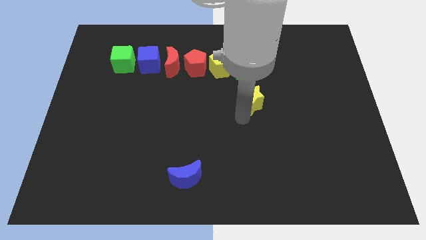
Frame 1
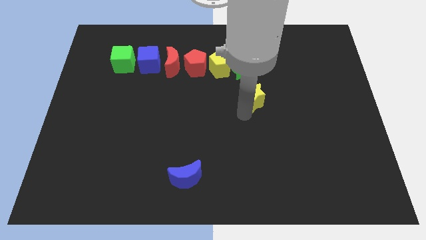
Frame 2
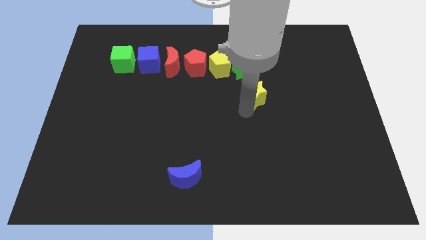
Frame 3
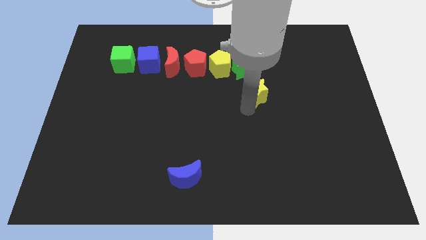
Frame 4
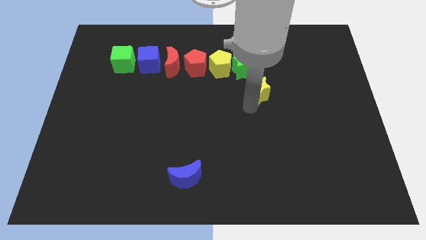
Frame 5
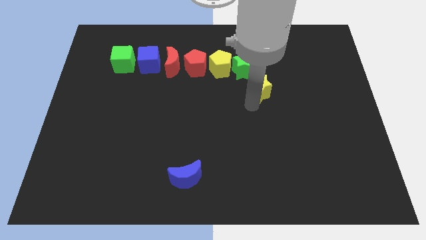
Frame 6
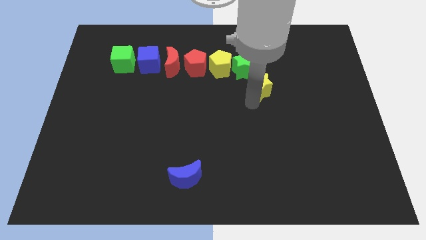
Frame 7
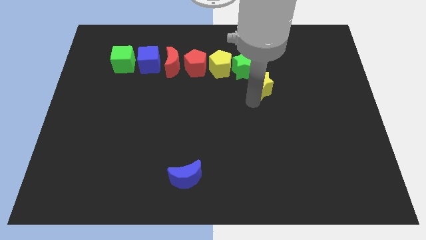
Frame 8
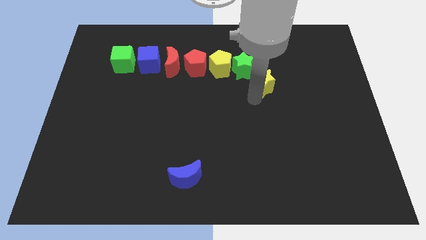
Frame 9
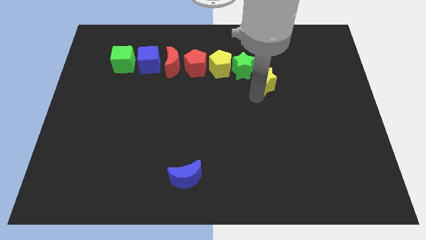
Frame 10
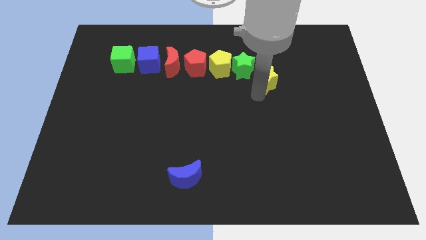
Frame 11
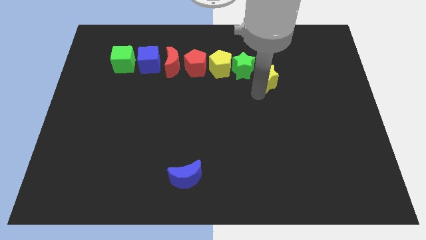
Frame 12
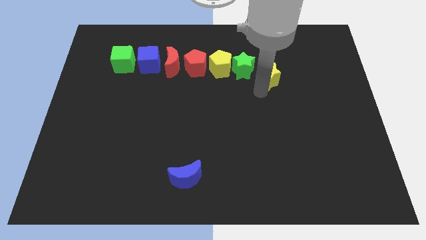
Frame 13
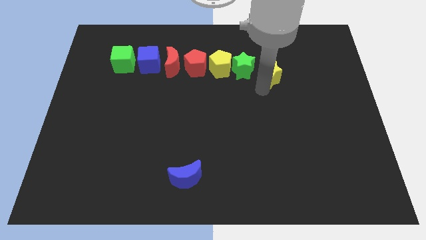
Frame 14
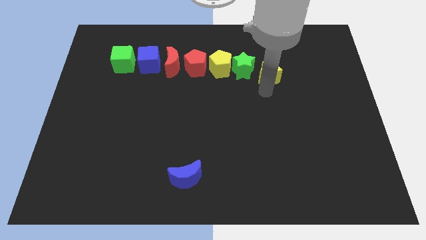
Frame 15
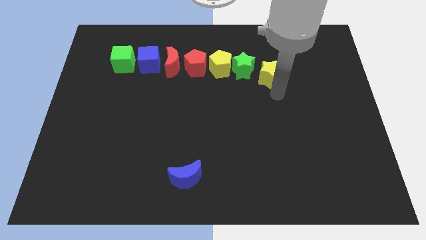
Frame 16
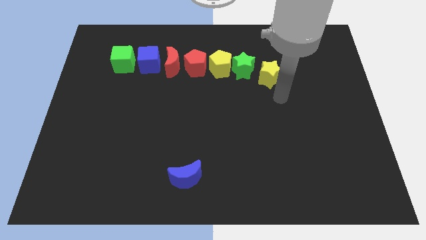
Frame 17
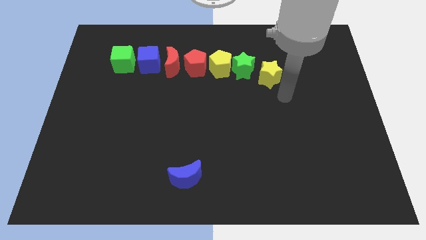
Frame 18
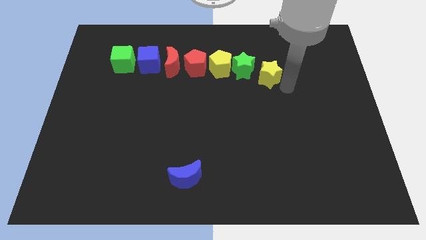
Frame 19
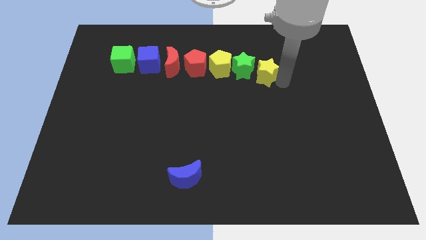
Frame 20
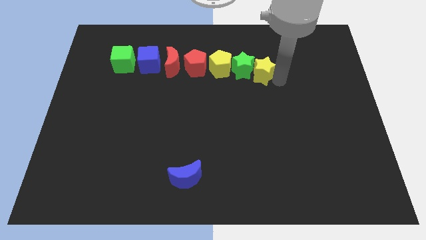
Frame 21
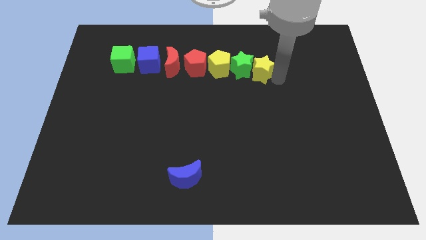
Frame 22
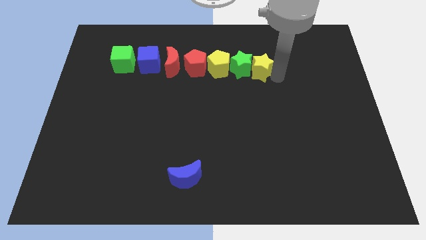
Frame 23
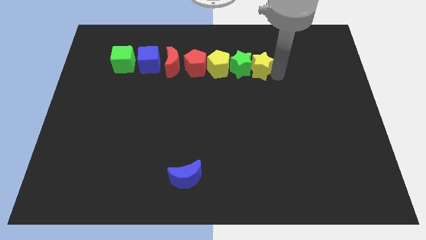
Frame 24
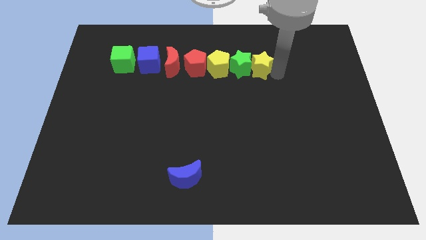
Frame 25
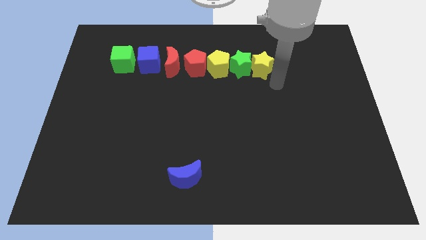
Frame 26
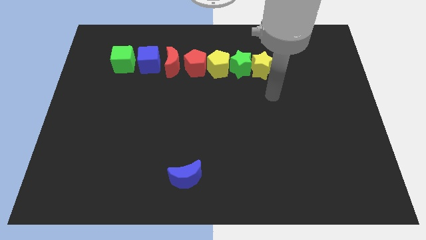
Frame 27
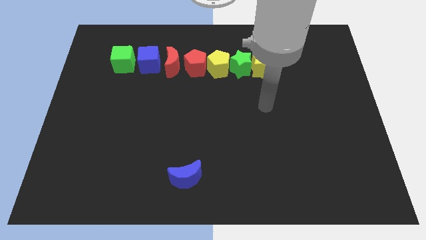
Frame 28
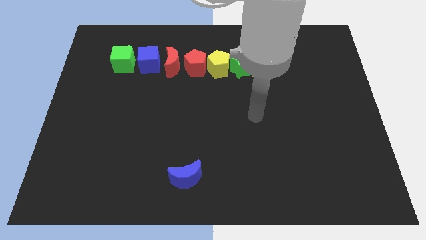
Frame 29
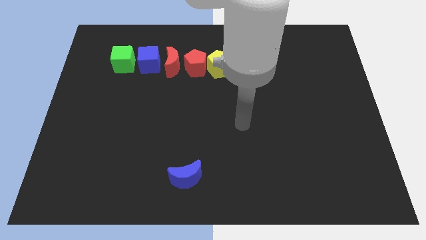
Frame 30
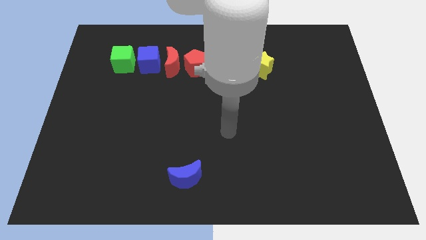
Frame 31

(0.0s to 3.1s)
place yellow star beside green star

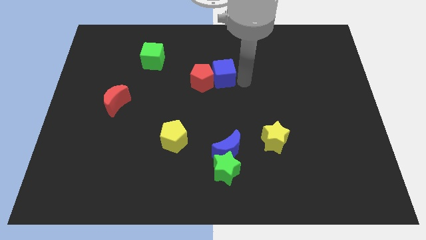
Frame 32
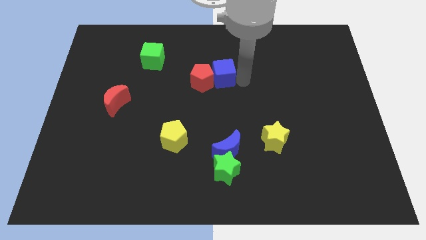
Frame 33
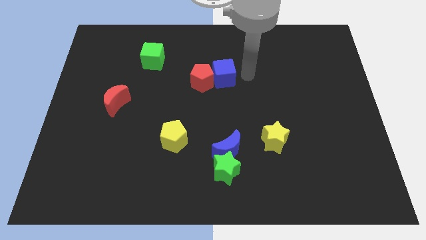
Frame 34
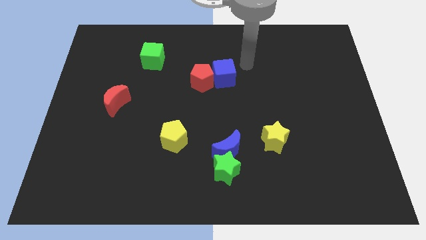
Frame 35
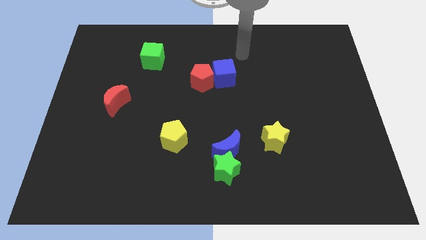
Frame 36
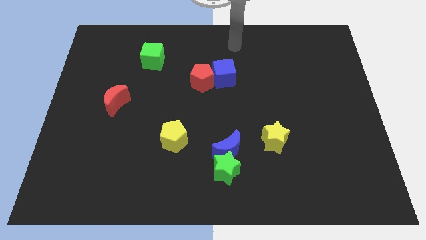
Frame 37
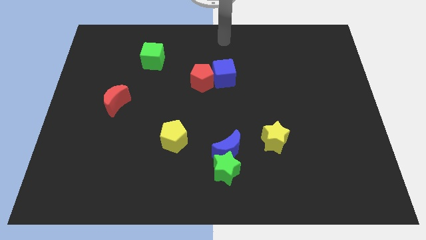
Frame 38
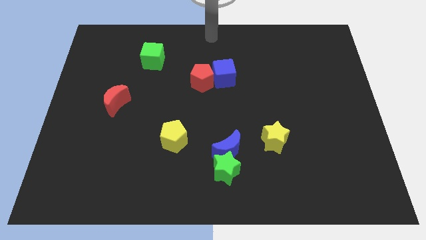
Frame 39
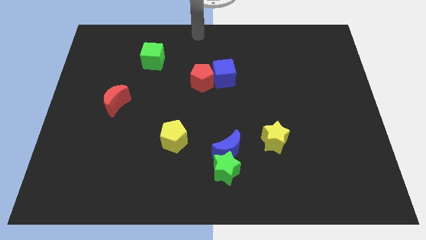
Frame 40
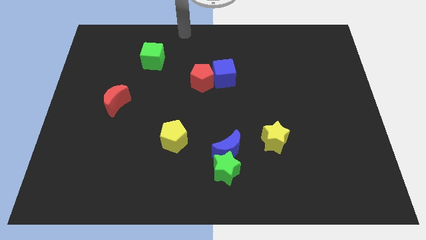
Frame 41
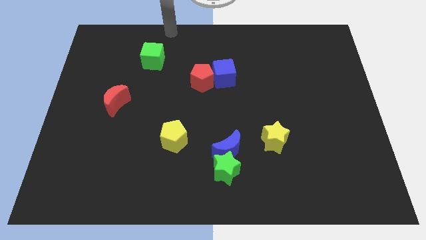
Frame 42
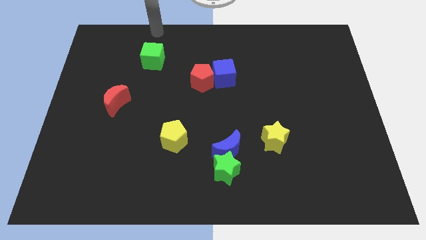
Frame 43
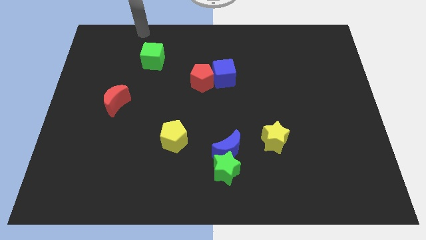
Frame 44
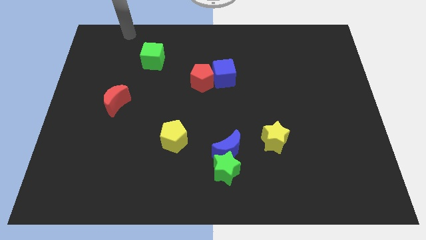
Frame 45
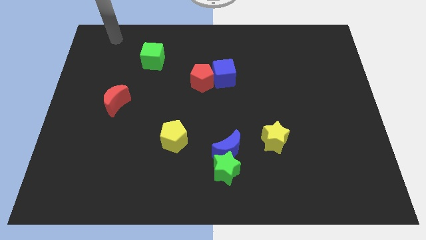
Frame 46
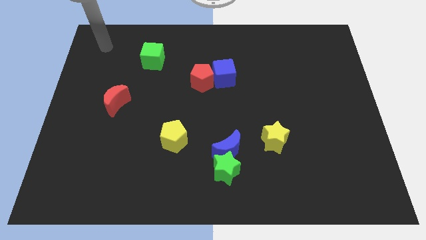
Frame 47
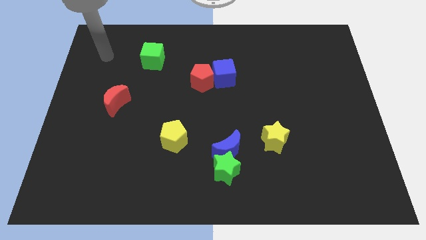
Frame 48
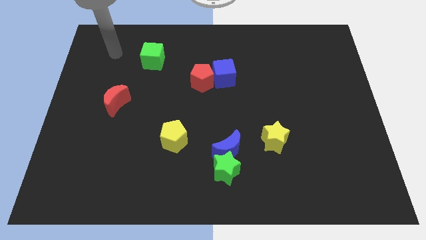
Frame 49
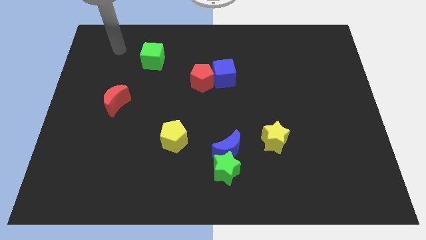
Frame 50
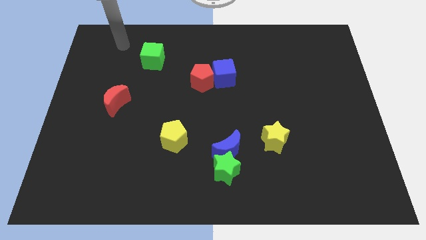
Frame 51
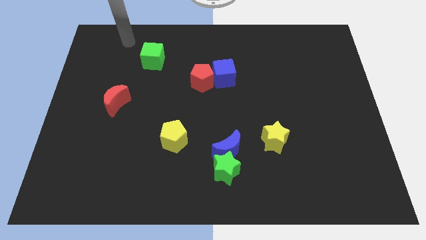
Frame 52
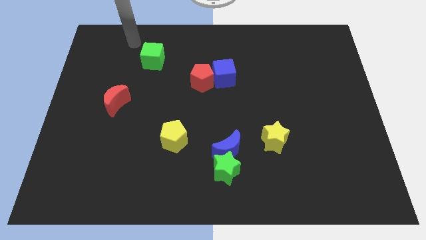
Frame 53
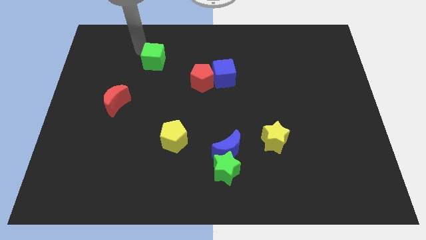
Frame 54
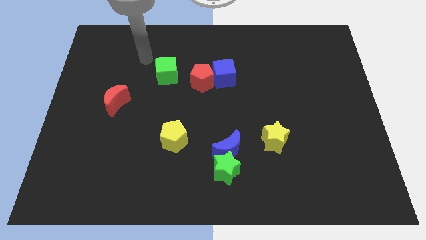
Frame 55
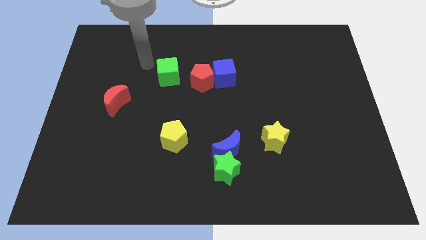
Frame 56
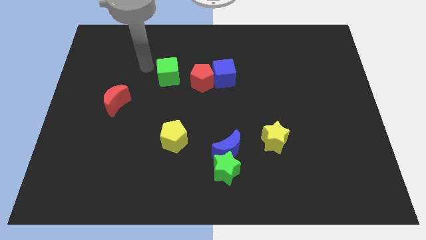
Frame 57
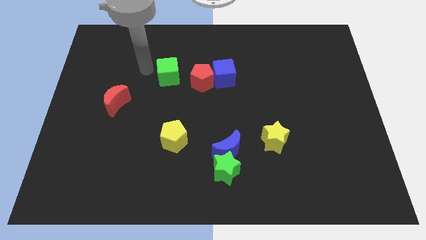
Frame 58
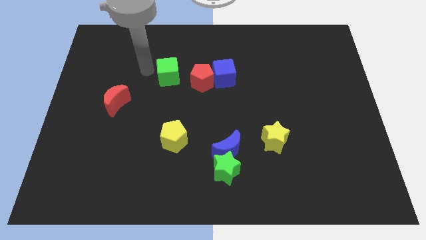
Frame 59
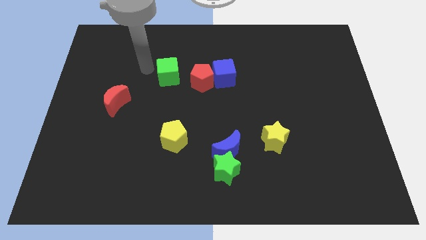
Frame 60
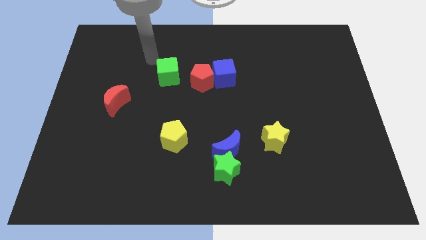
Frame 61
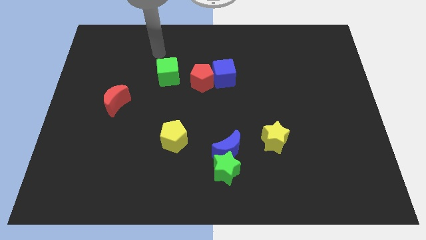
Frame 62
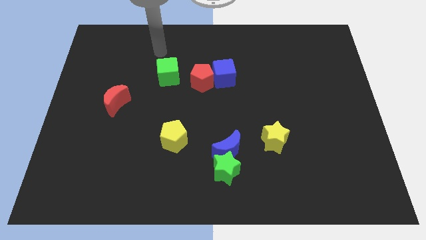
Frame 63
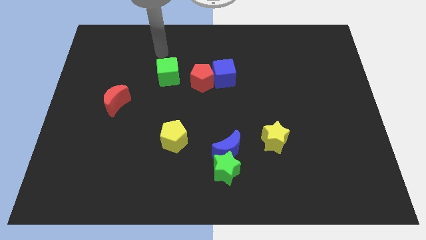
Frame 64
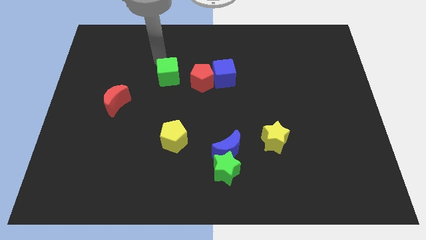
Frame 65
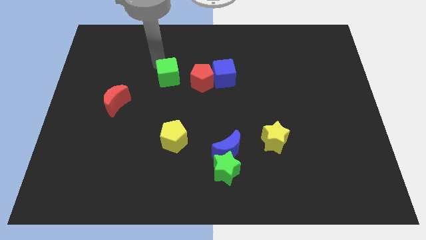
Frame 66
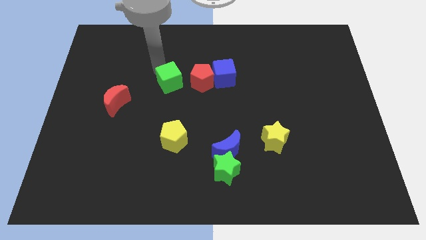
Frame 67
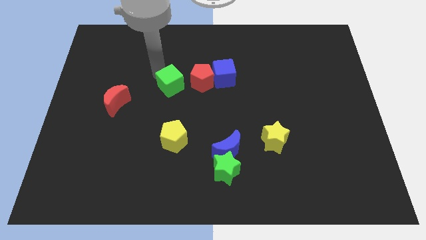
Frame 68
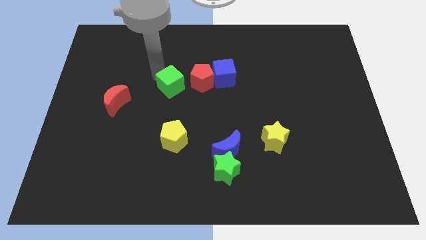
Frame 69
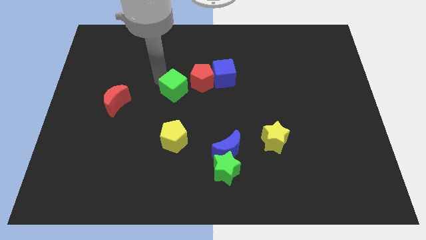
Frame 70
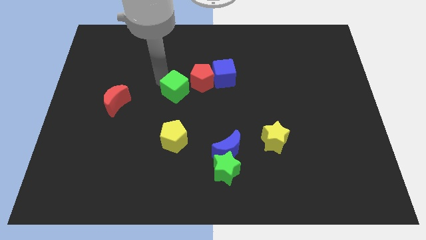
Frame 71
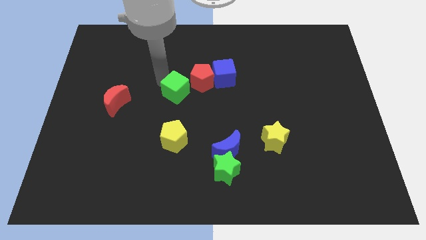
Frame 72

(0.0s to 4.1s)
push the green cube closer to the yellow pentagon

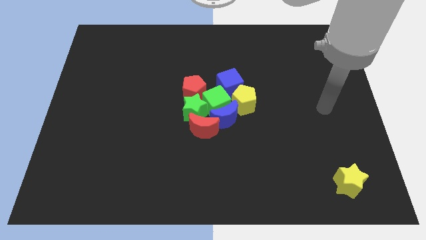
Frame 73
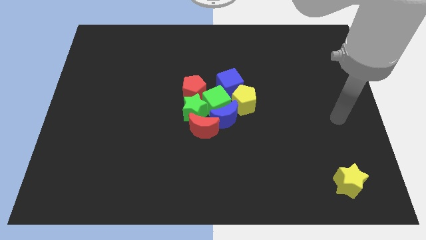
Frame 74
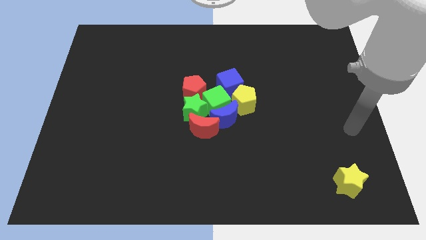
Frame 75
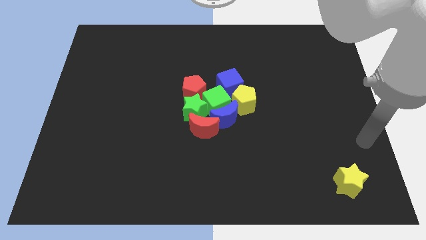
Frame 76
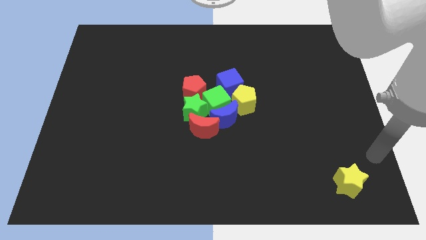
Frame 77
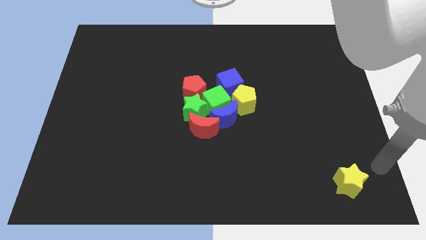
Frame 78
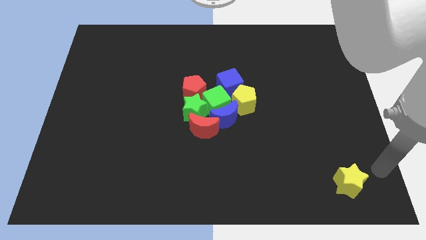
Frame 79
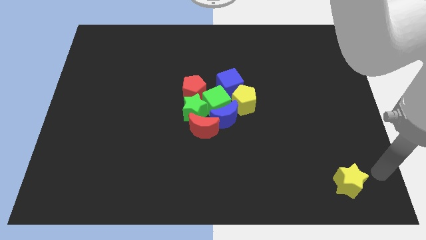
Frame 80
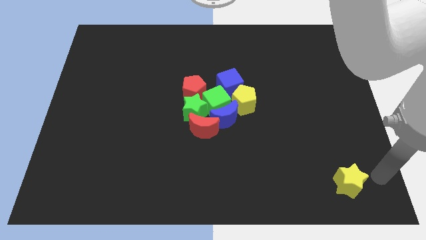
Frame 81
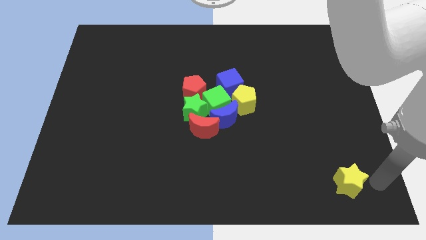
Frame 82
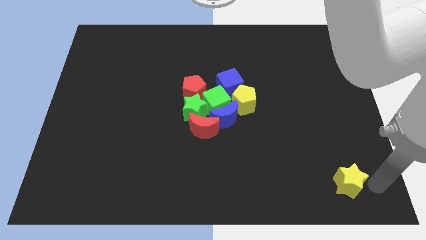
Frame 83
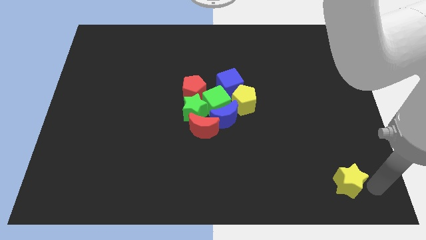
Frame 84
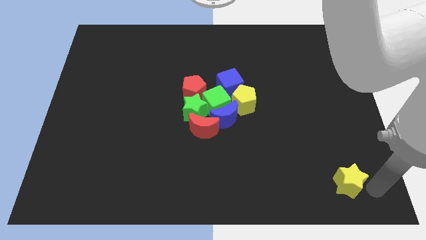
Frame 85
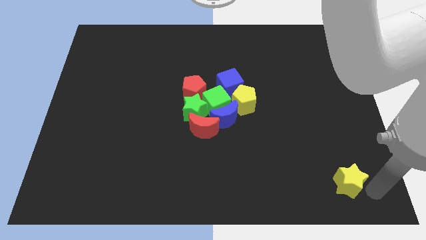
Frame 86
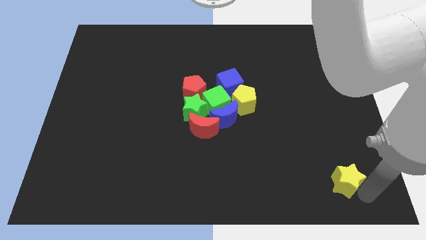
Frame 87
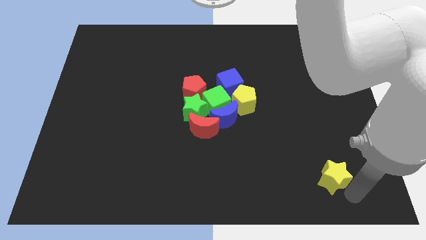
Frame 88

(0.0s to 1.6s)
tap the yellow star

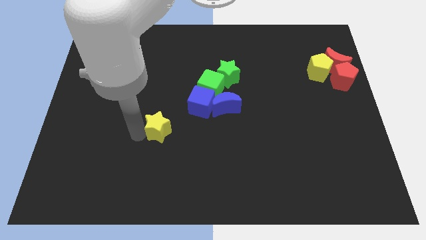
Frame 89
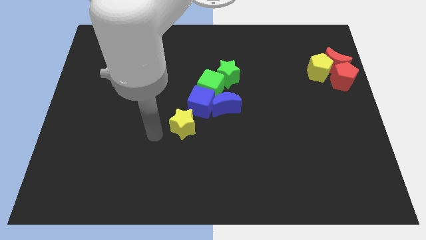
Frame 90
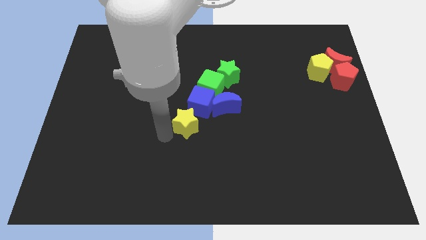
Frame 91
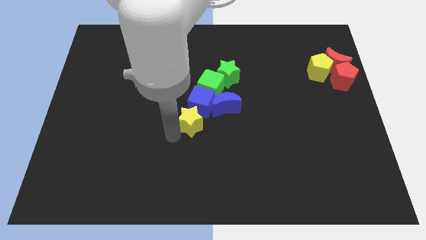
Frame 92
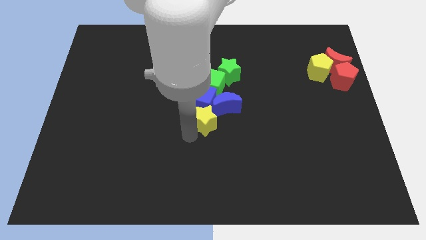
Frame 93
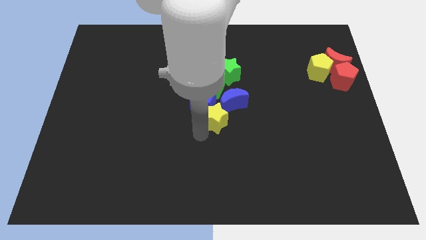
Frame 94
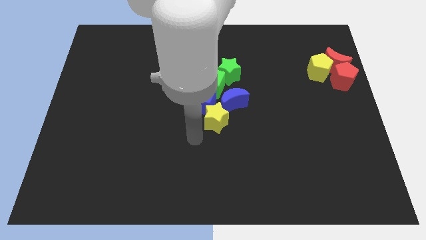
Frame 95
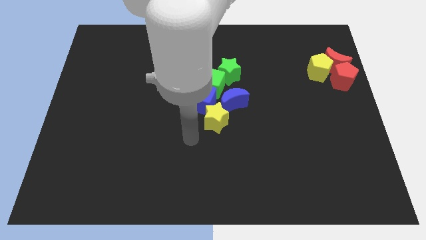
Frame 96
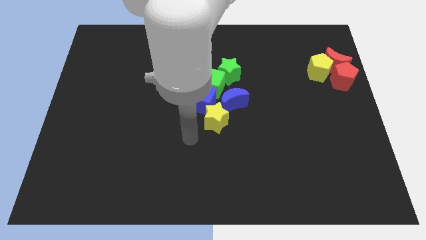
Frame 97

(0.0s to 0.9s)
move the yellow star into the blue crescent
